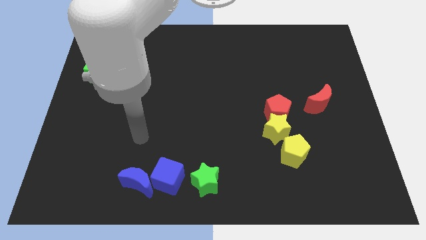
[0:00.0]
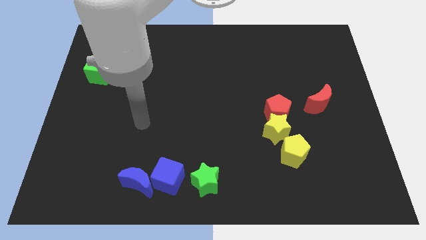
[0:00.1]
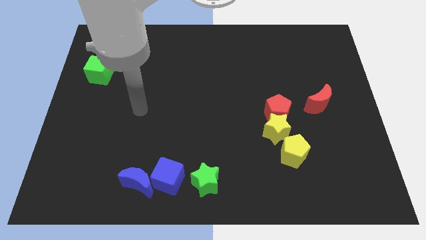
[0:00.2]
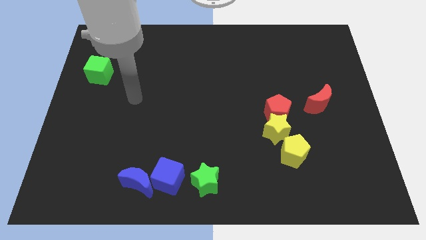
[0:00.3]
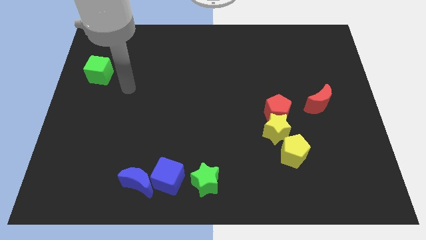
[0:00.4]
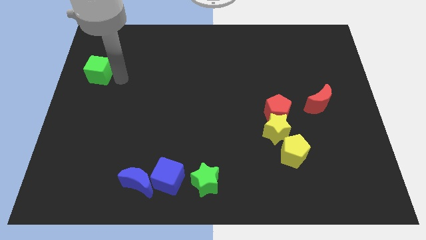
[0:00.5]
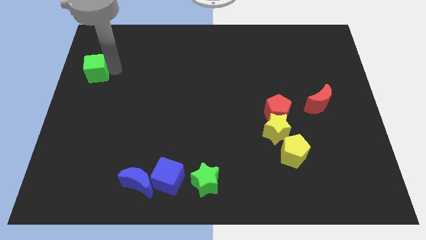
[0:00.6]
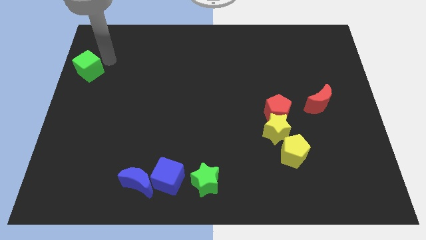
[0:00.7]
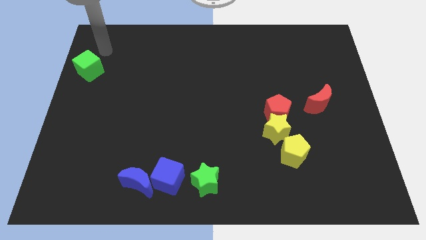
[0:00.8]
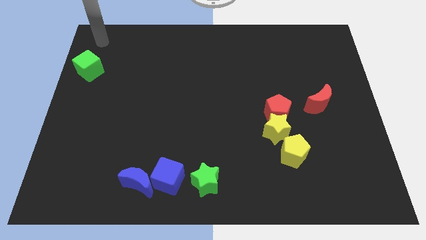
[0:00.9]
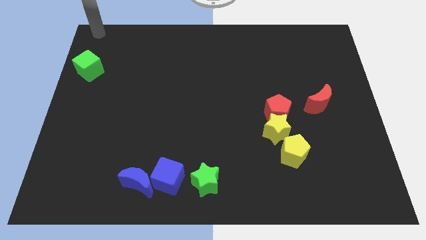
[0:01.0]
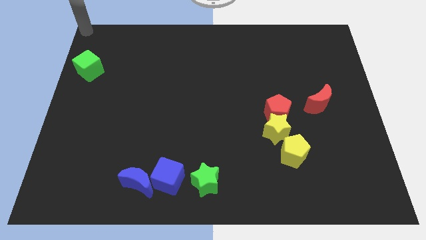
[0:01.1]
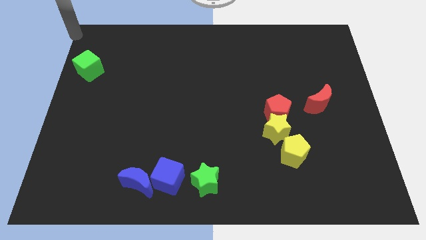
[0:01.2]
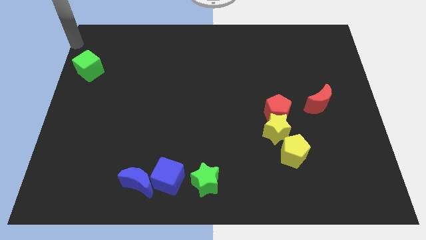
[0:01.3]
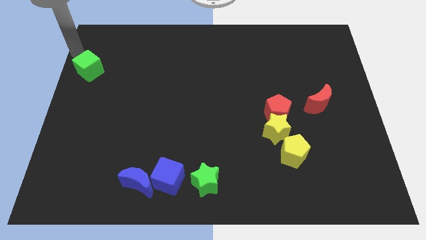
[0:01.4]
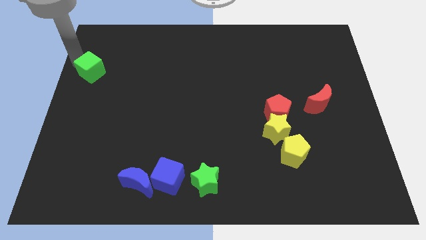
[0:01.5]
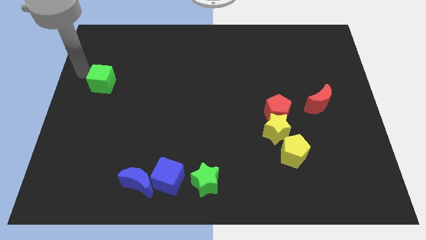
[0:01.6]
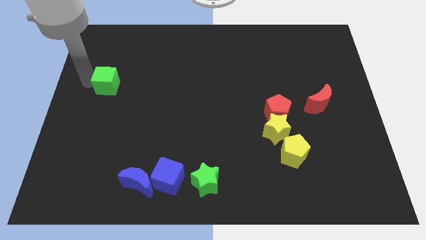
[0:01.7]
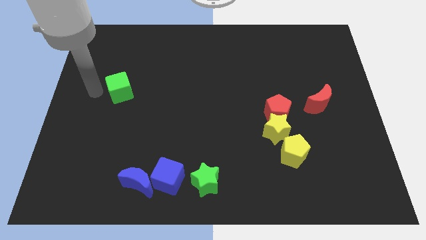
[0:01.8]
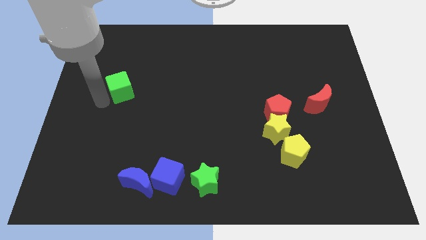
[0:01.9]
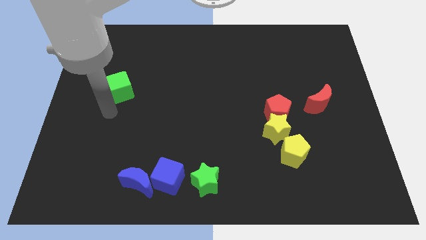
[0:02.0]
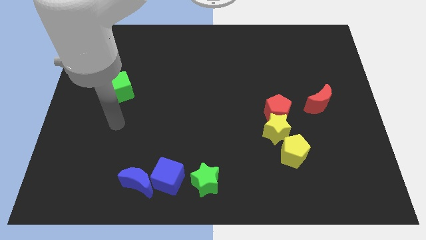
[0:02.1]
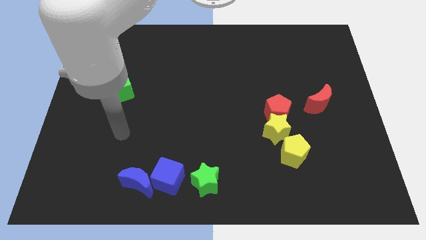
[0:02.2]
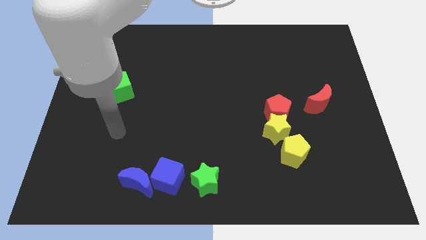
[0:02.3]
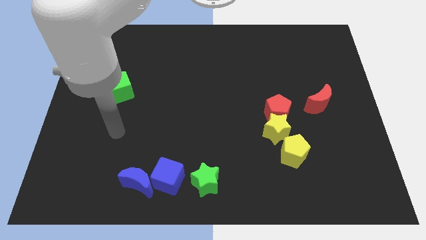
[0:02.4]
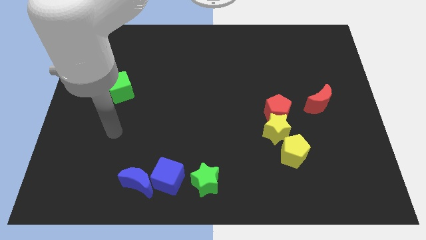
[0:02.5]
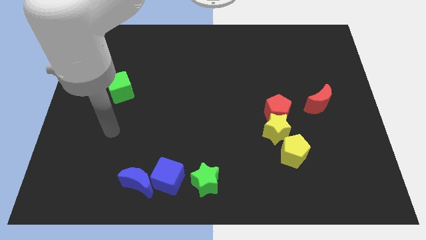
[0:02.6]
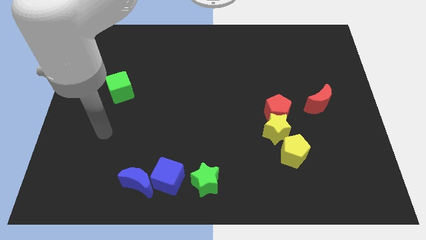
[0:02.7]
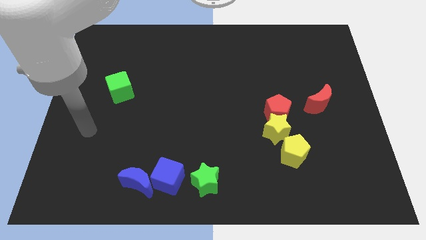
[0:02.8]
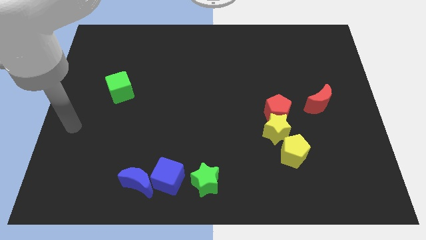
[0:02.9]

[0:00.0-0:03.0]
push the green cube towards the bottom side of the board

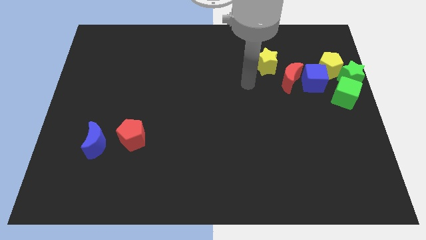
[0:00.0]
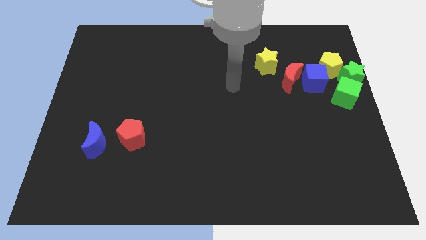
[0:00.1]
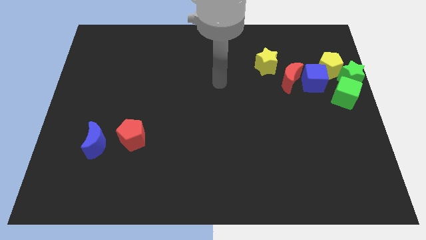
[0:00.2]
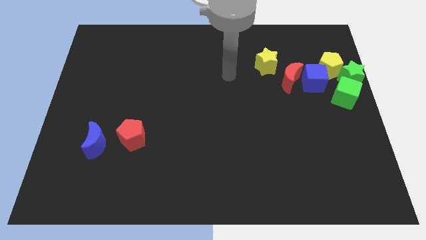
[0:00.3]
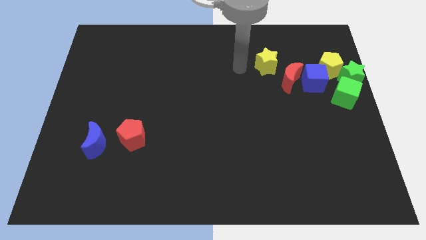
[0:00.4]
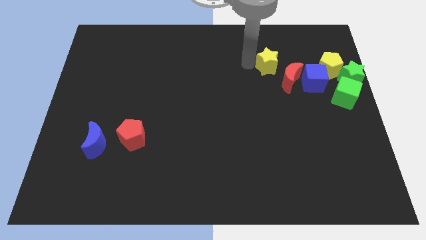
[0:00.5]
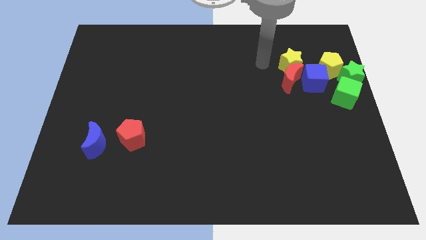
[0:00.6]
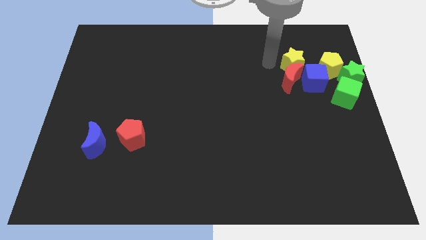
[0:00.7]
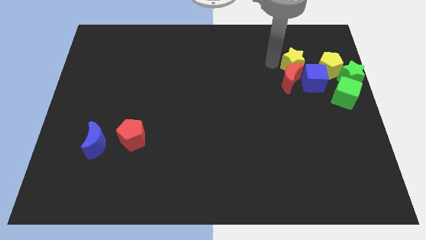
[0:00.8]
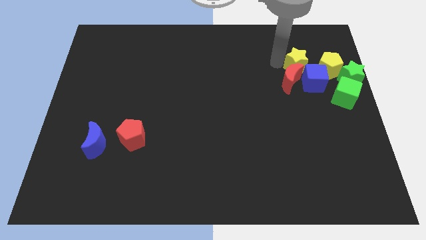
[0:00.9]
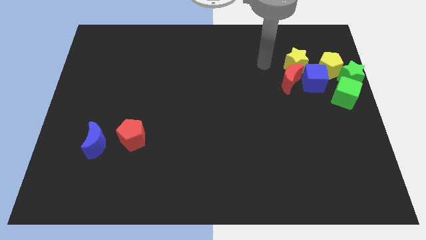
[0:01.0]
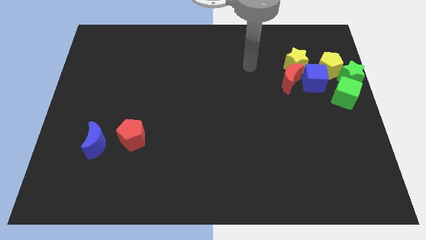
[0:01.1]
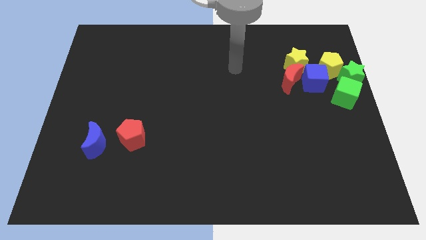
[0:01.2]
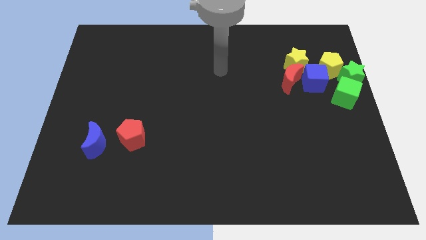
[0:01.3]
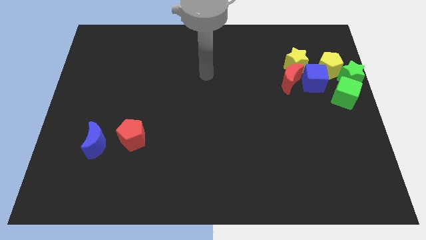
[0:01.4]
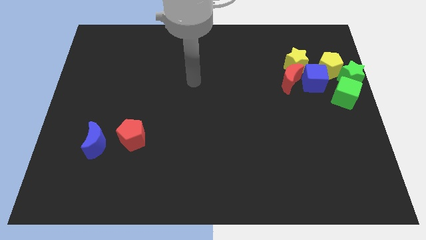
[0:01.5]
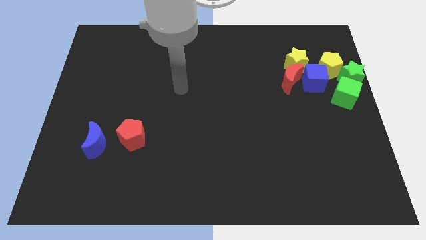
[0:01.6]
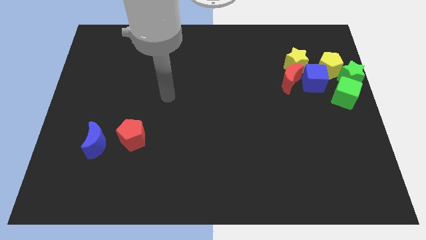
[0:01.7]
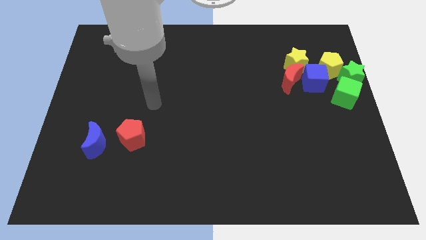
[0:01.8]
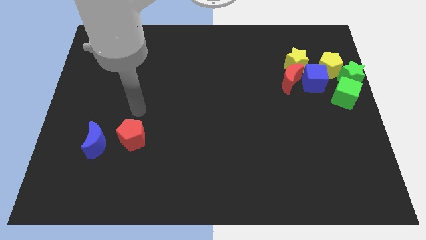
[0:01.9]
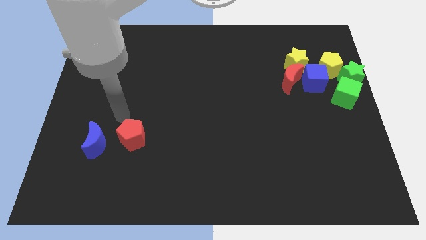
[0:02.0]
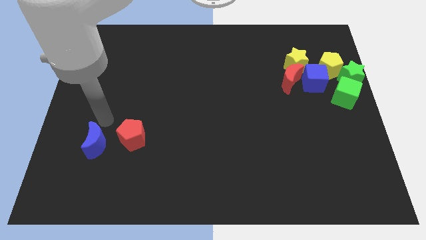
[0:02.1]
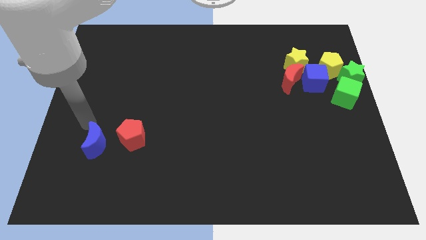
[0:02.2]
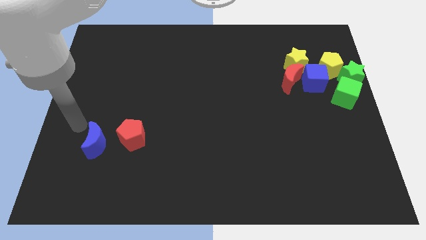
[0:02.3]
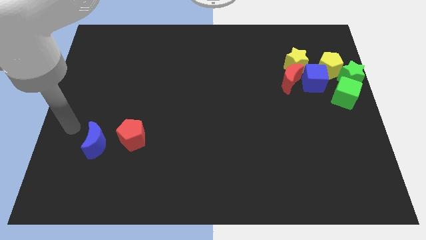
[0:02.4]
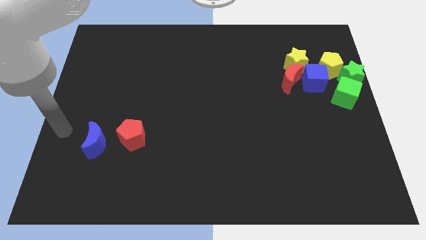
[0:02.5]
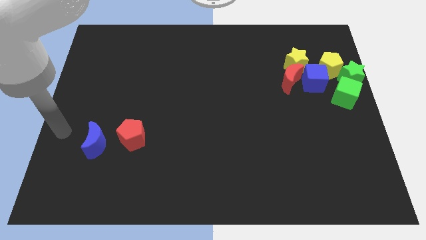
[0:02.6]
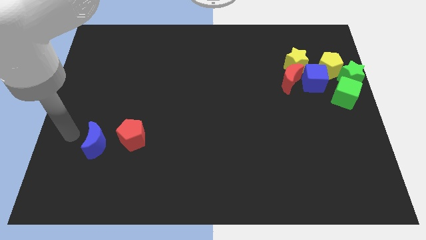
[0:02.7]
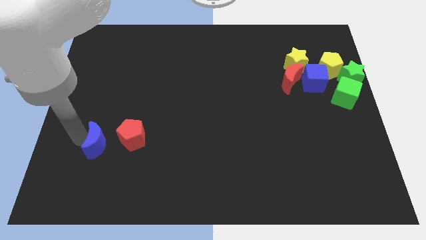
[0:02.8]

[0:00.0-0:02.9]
push the yellow star to the top of the red crescent

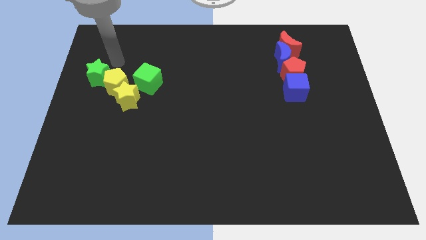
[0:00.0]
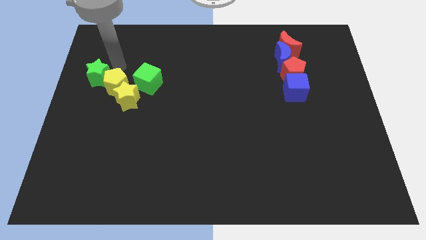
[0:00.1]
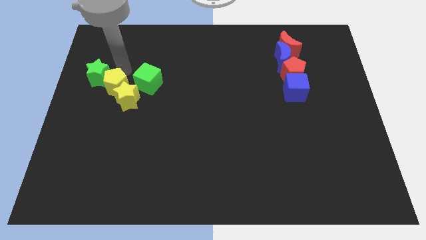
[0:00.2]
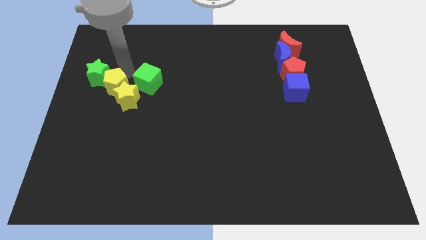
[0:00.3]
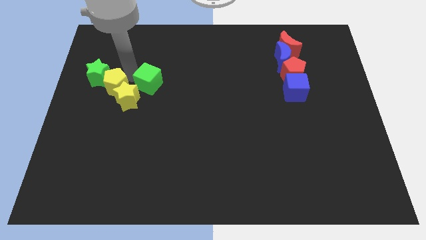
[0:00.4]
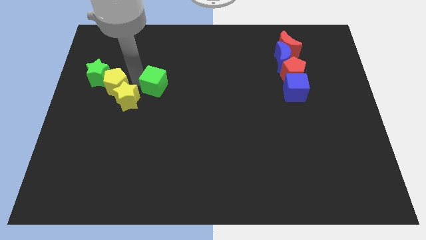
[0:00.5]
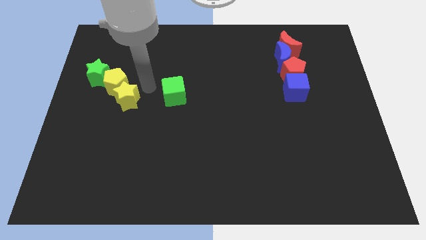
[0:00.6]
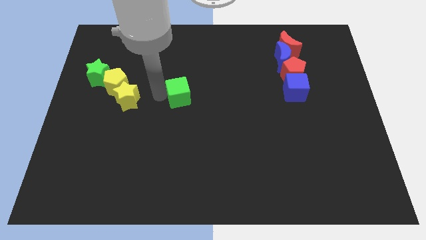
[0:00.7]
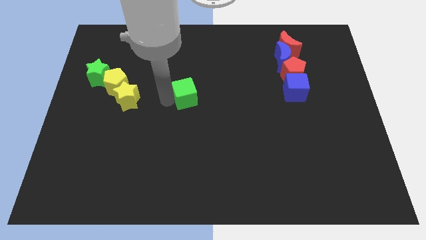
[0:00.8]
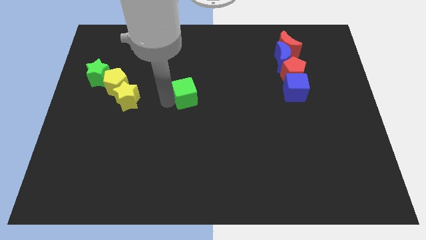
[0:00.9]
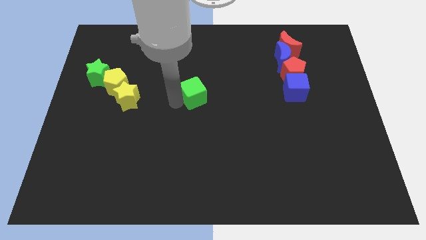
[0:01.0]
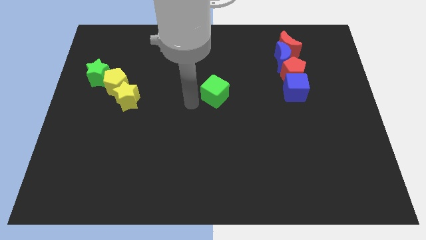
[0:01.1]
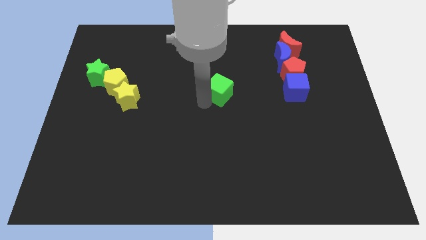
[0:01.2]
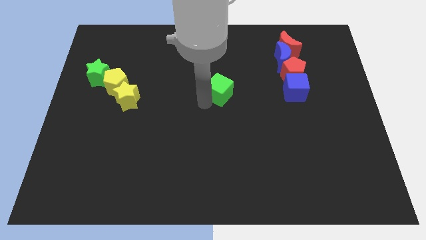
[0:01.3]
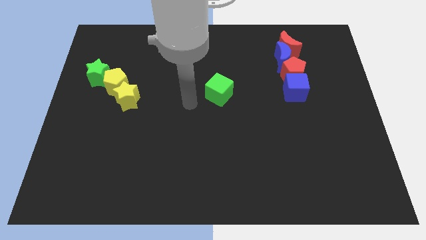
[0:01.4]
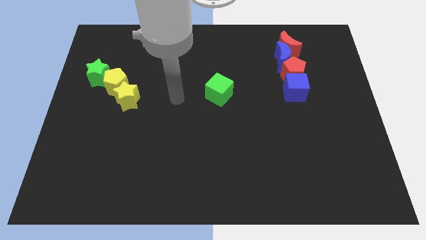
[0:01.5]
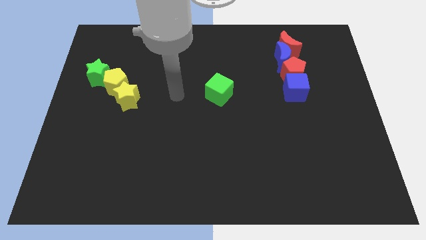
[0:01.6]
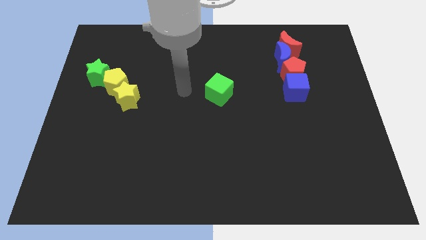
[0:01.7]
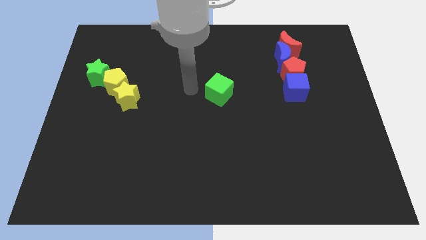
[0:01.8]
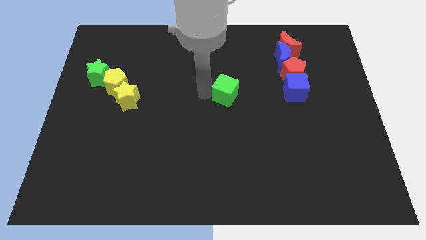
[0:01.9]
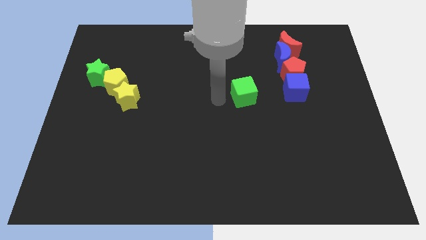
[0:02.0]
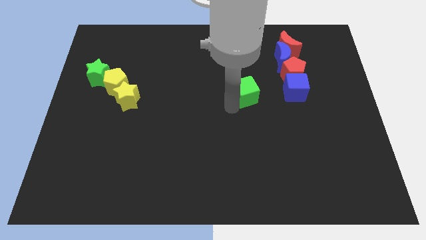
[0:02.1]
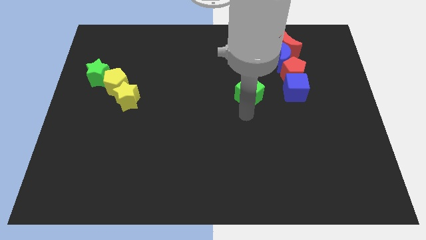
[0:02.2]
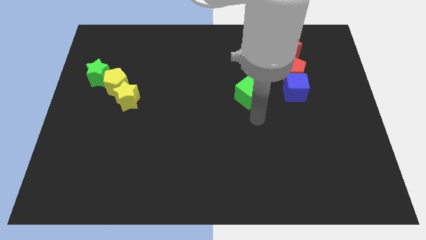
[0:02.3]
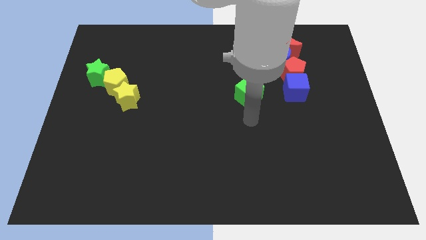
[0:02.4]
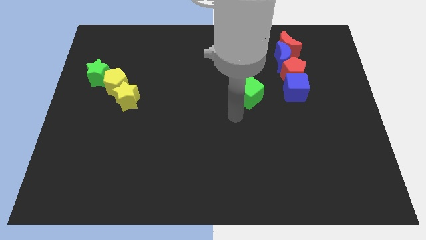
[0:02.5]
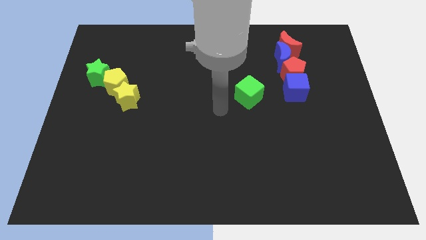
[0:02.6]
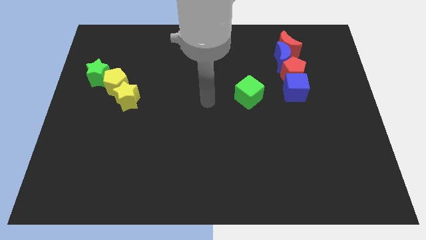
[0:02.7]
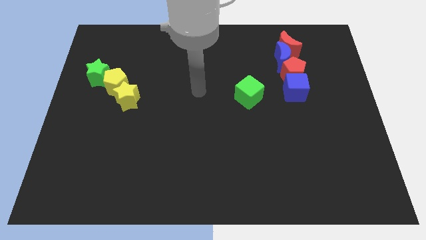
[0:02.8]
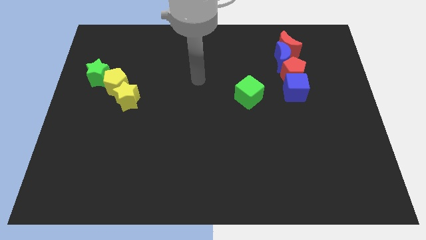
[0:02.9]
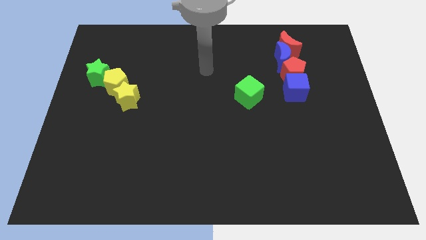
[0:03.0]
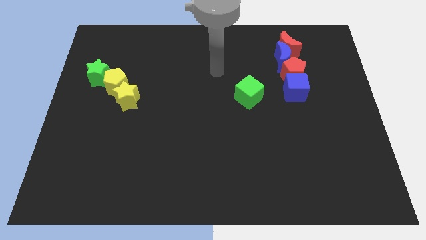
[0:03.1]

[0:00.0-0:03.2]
move the green cube near to the center side
